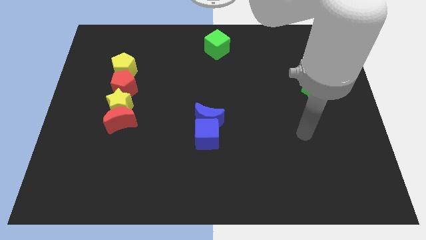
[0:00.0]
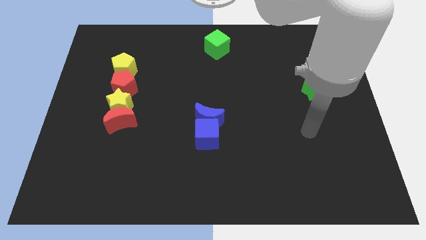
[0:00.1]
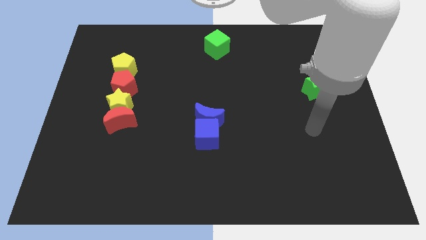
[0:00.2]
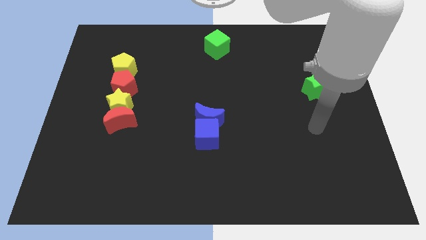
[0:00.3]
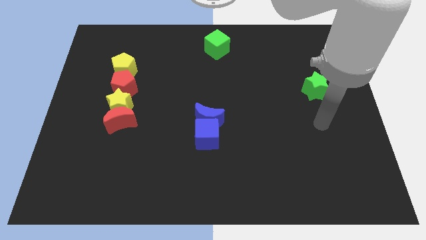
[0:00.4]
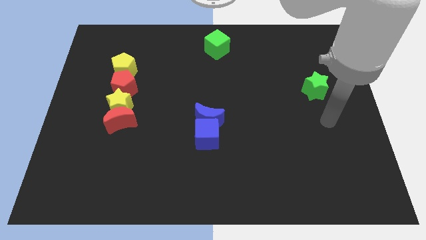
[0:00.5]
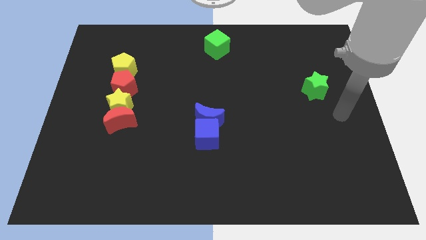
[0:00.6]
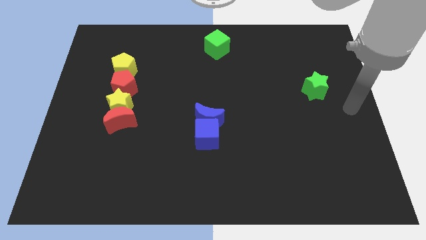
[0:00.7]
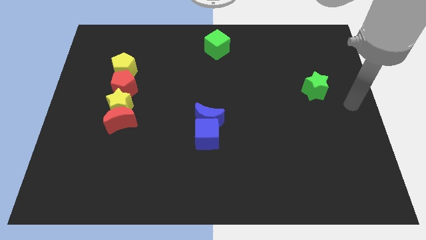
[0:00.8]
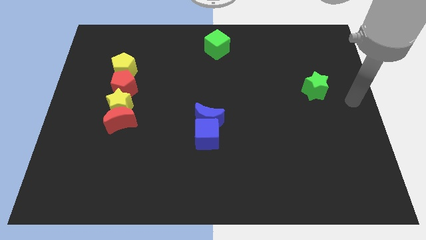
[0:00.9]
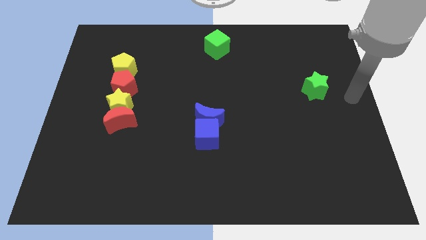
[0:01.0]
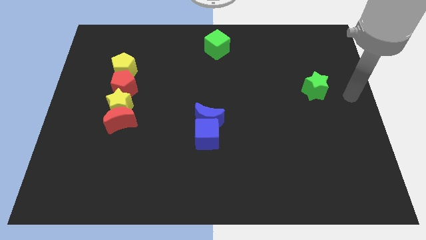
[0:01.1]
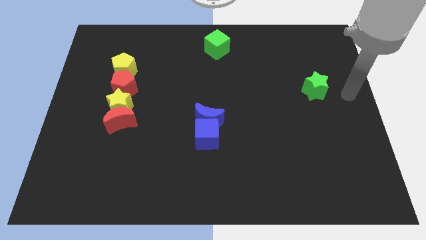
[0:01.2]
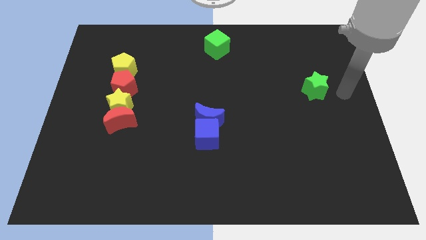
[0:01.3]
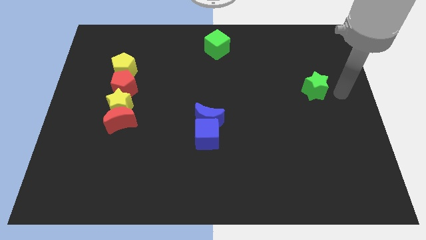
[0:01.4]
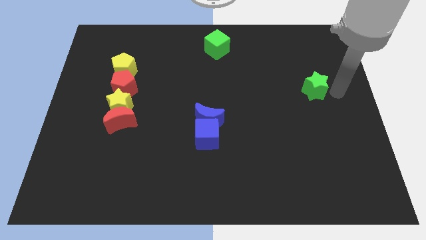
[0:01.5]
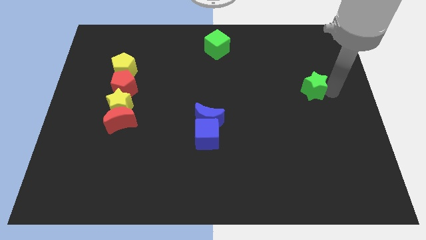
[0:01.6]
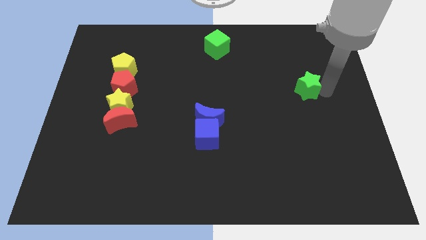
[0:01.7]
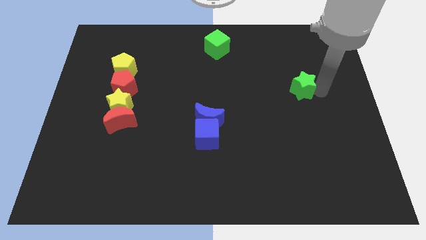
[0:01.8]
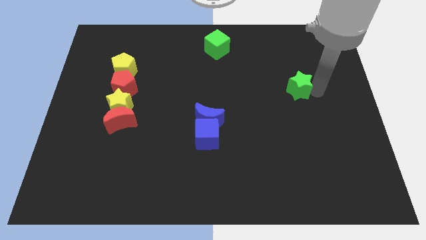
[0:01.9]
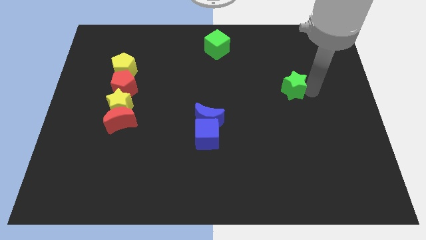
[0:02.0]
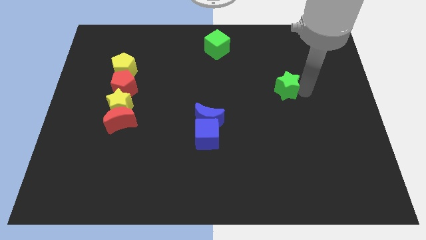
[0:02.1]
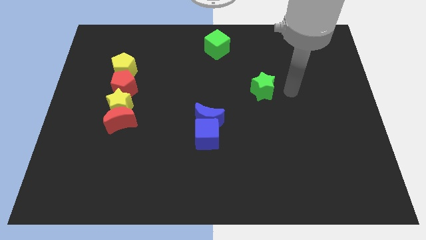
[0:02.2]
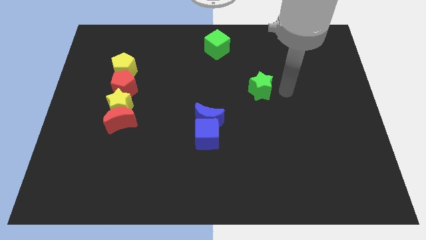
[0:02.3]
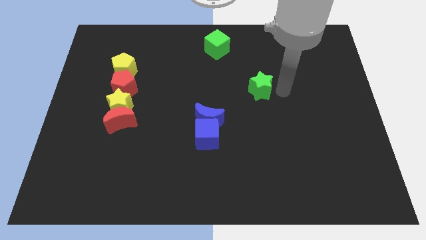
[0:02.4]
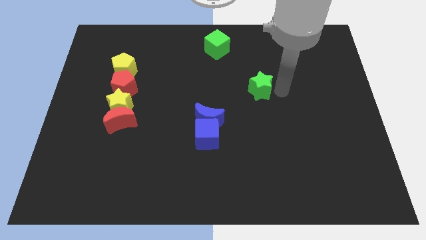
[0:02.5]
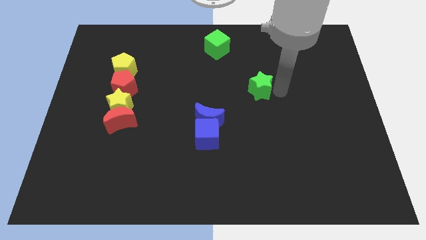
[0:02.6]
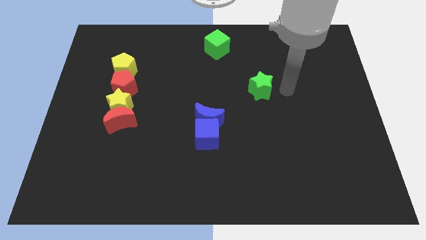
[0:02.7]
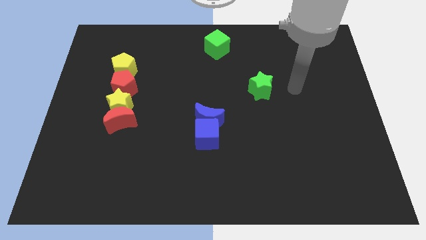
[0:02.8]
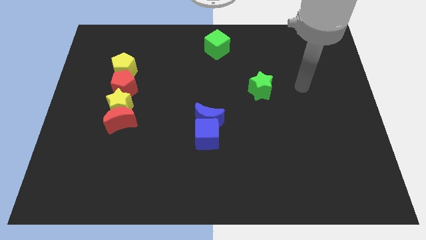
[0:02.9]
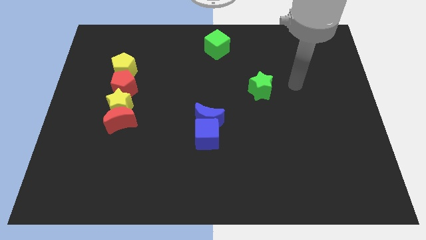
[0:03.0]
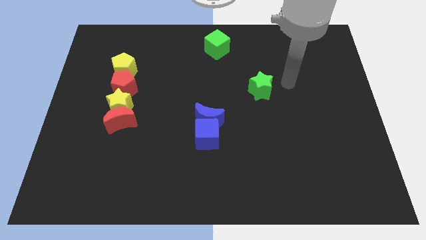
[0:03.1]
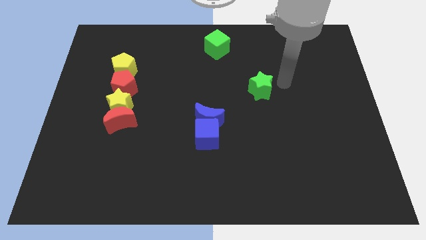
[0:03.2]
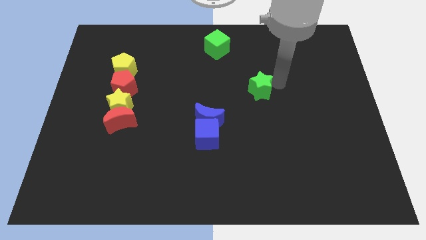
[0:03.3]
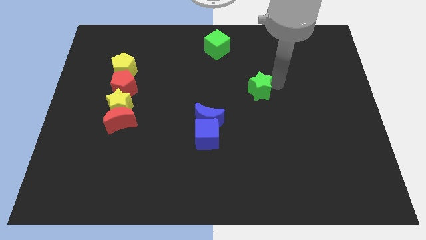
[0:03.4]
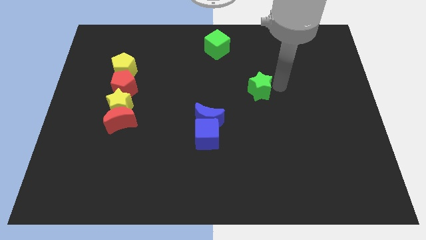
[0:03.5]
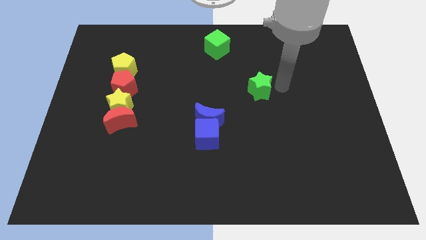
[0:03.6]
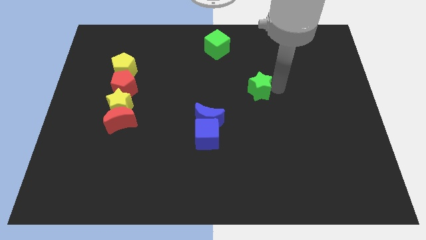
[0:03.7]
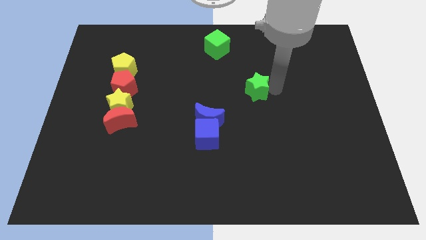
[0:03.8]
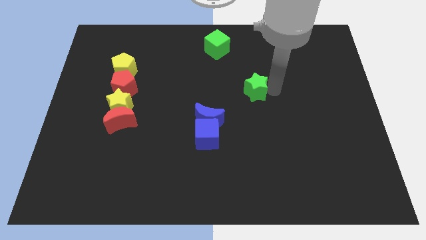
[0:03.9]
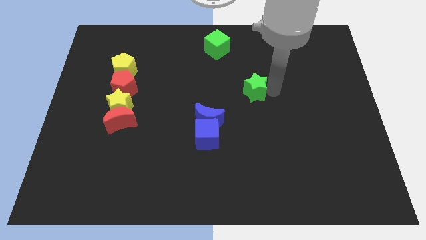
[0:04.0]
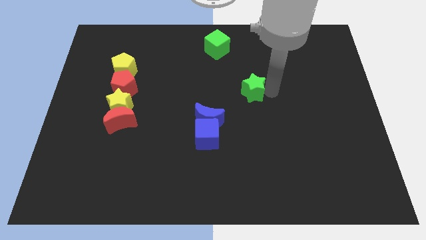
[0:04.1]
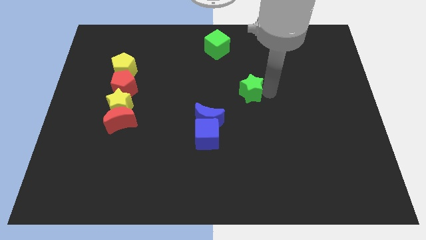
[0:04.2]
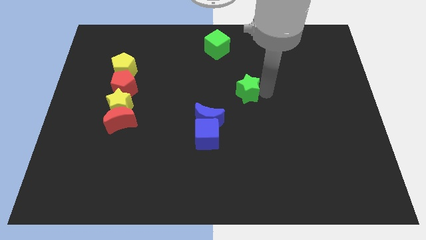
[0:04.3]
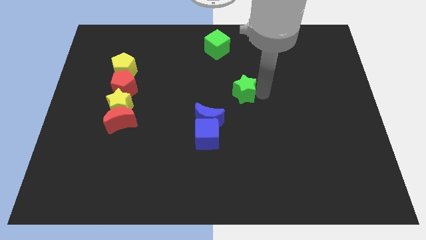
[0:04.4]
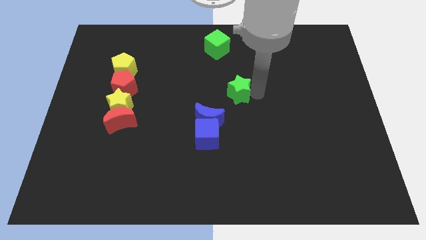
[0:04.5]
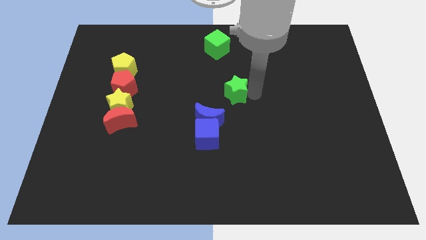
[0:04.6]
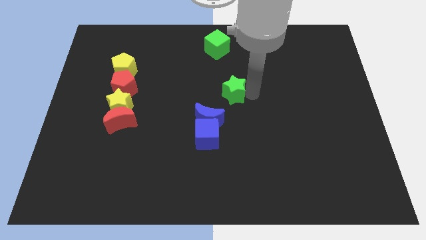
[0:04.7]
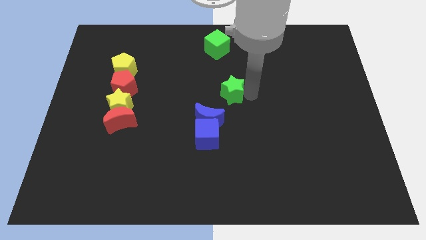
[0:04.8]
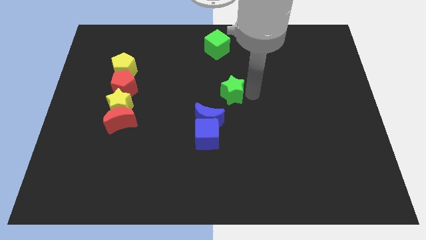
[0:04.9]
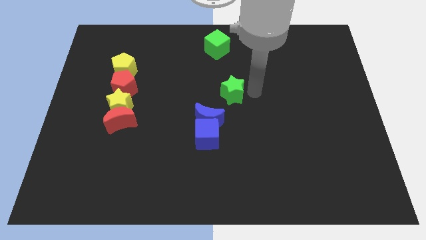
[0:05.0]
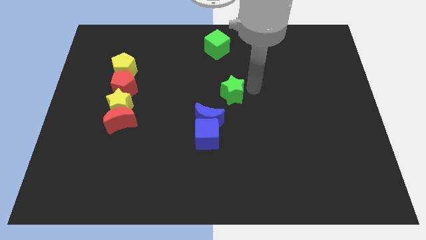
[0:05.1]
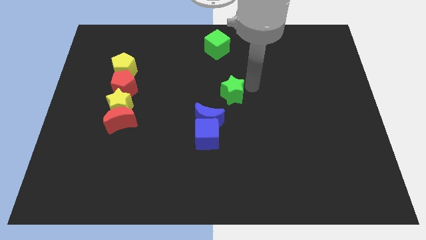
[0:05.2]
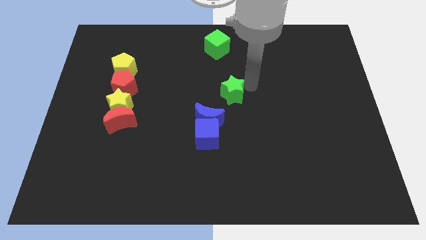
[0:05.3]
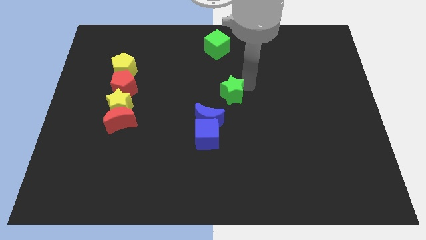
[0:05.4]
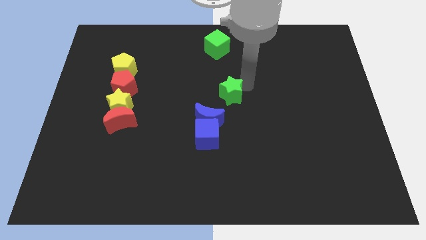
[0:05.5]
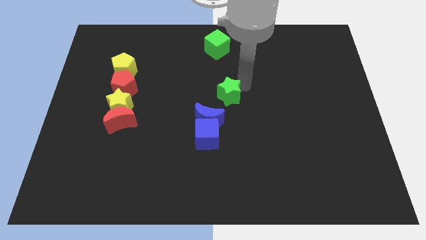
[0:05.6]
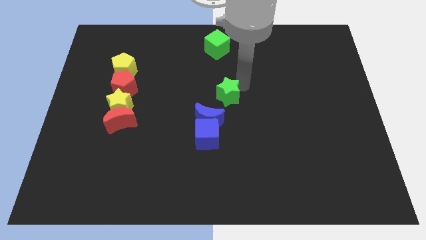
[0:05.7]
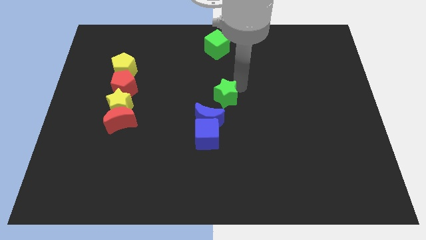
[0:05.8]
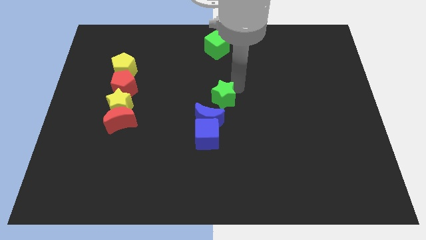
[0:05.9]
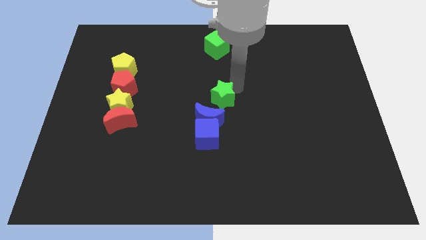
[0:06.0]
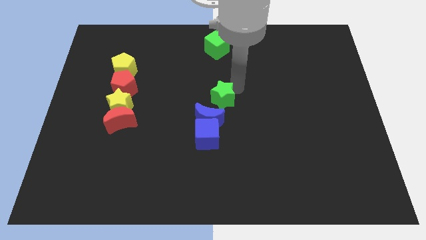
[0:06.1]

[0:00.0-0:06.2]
place green star at the center

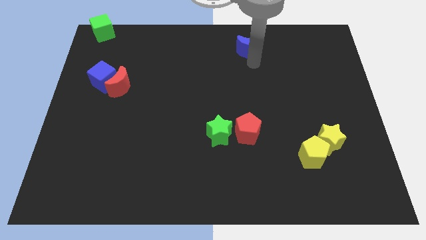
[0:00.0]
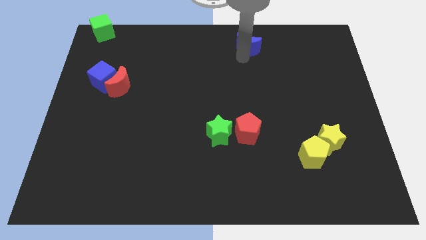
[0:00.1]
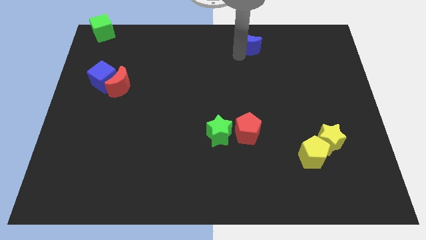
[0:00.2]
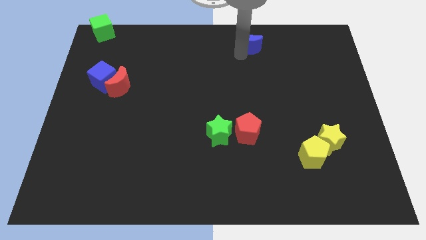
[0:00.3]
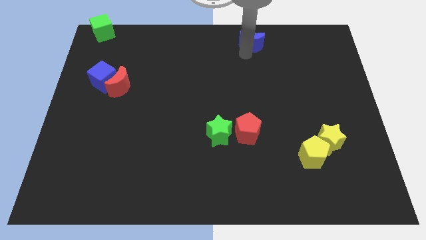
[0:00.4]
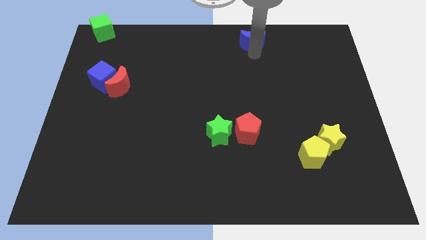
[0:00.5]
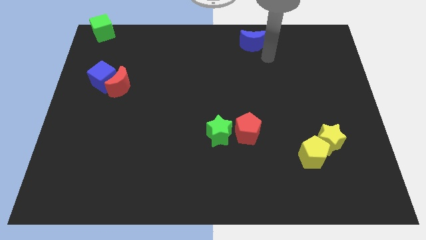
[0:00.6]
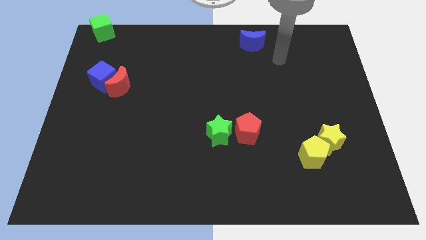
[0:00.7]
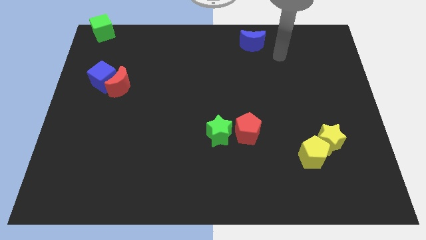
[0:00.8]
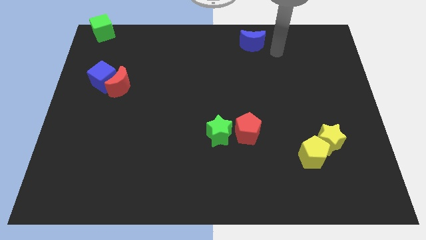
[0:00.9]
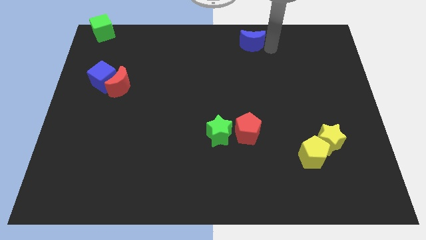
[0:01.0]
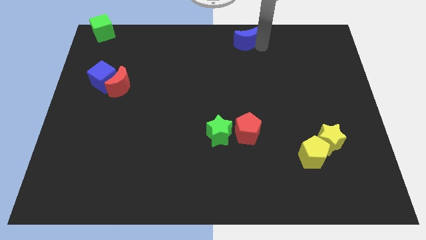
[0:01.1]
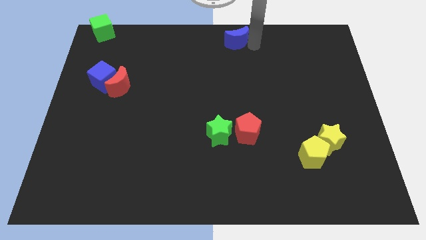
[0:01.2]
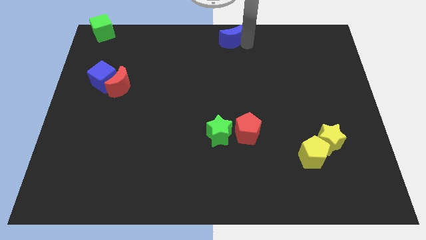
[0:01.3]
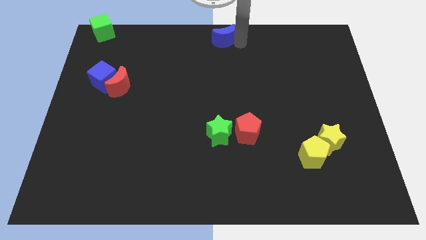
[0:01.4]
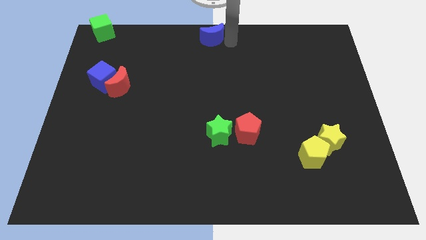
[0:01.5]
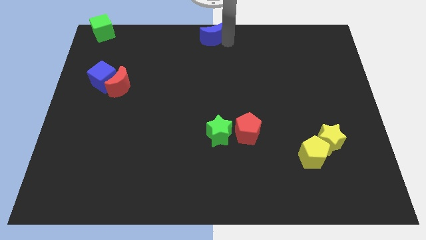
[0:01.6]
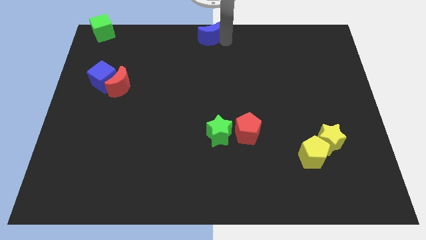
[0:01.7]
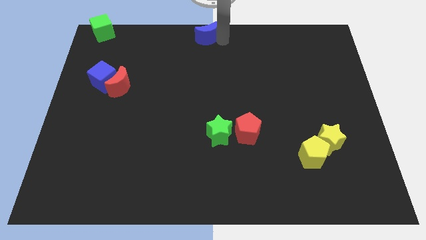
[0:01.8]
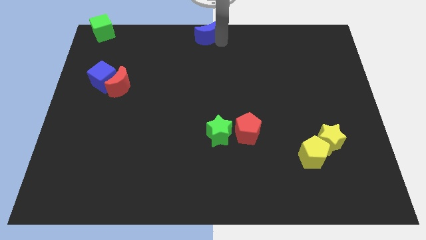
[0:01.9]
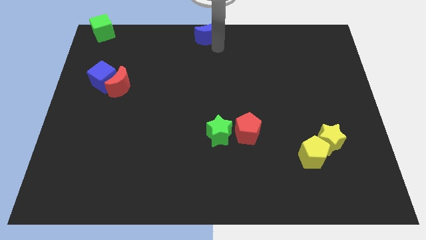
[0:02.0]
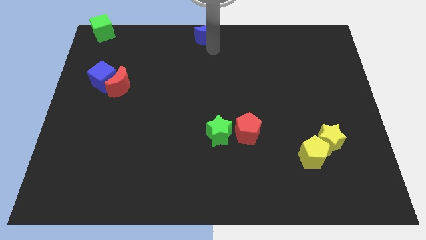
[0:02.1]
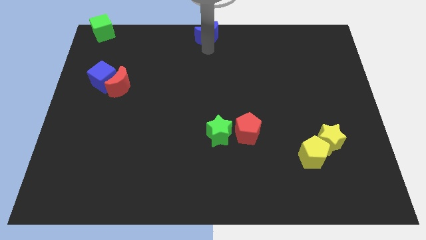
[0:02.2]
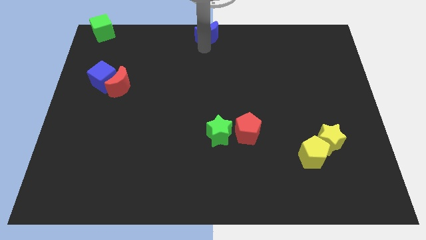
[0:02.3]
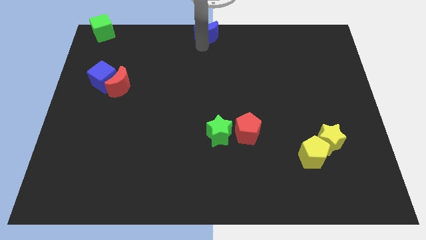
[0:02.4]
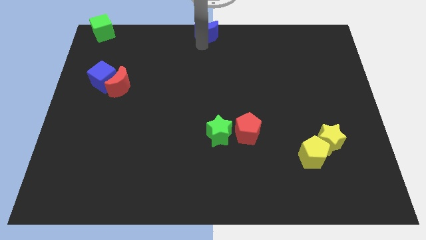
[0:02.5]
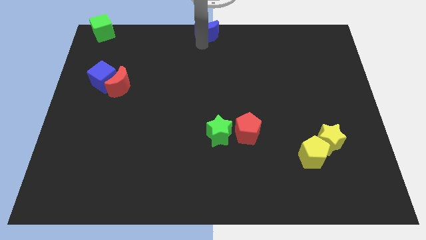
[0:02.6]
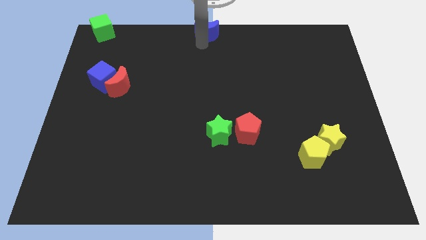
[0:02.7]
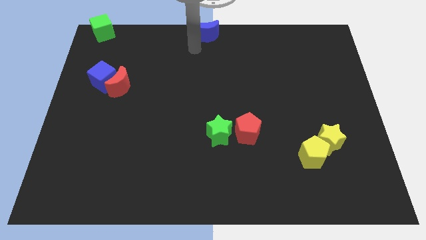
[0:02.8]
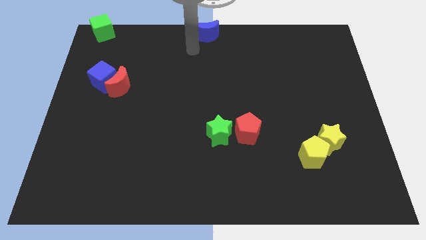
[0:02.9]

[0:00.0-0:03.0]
push the blue moon to the top center
